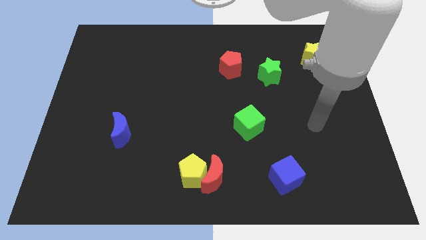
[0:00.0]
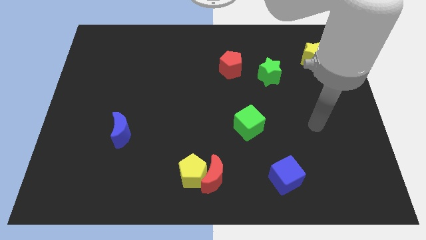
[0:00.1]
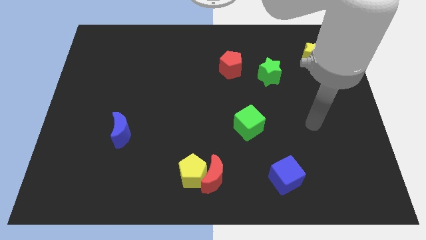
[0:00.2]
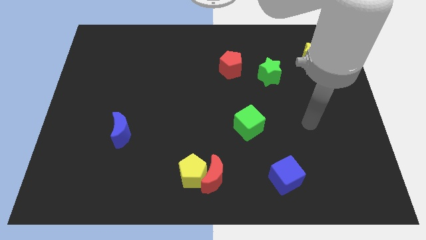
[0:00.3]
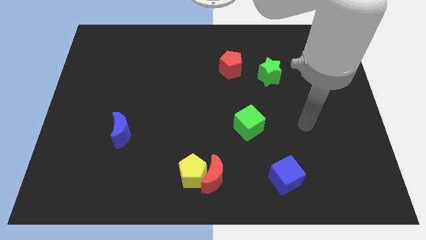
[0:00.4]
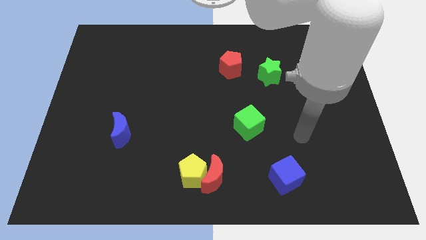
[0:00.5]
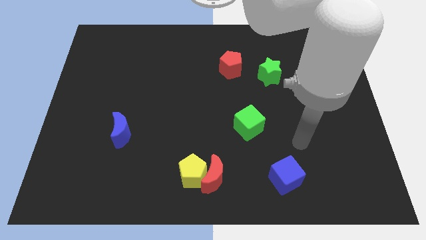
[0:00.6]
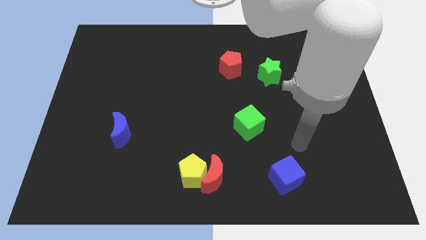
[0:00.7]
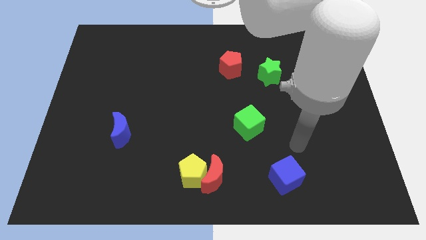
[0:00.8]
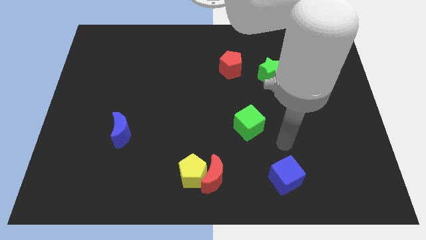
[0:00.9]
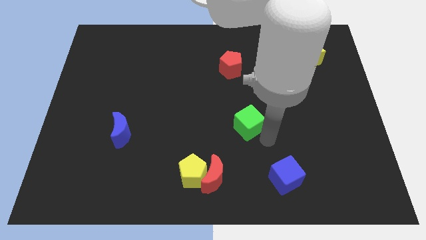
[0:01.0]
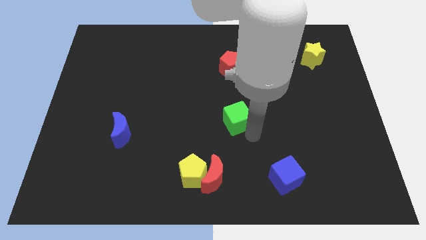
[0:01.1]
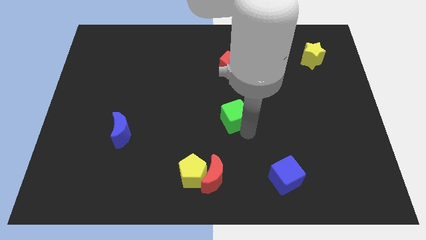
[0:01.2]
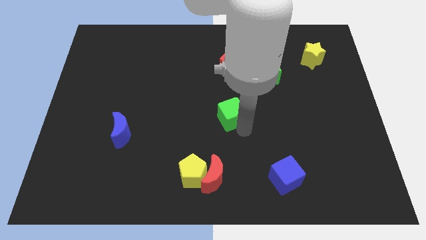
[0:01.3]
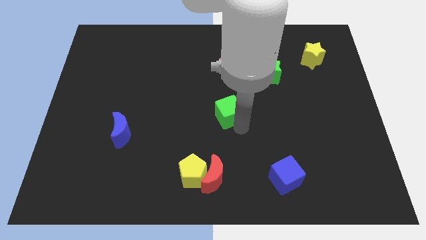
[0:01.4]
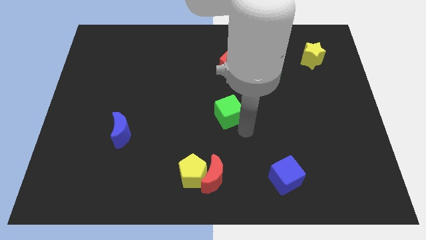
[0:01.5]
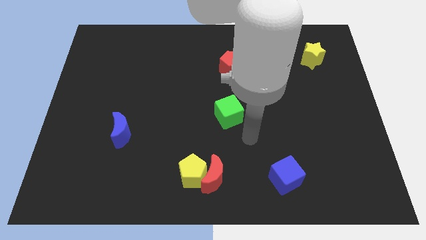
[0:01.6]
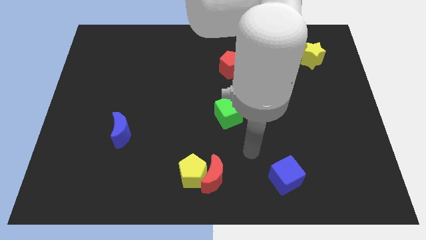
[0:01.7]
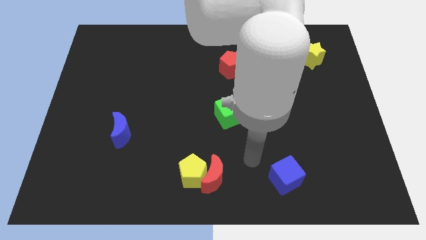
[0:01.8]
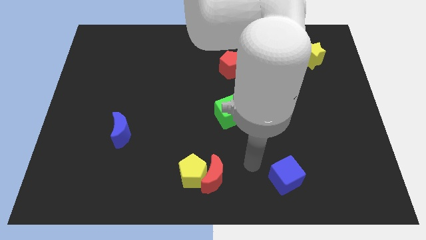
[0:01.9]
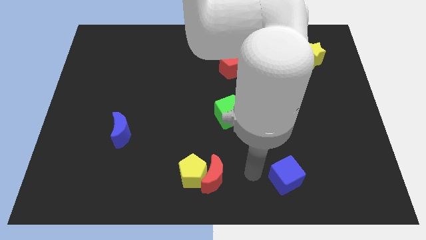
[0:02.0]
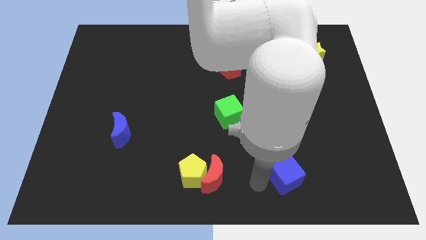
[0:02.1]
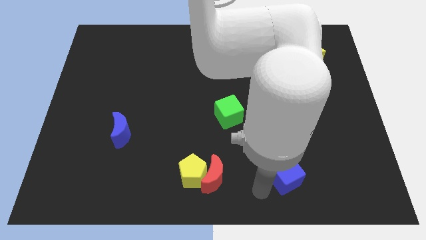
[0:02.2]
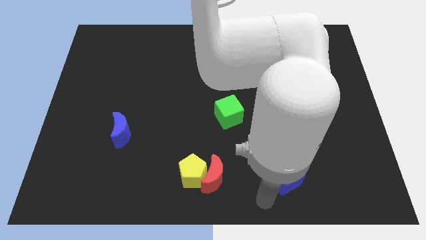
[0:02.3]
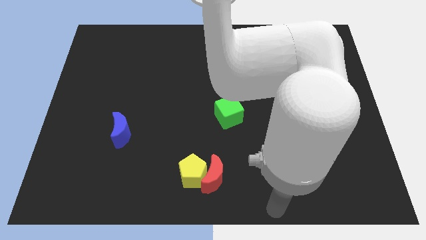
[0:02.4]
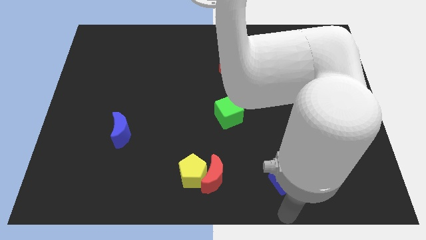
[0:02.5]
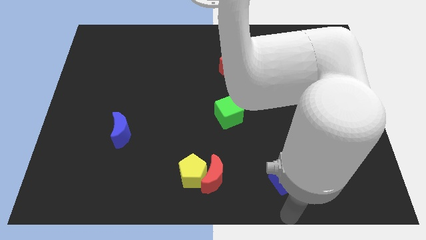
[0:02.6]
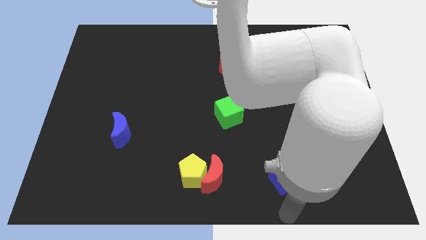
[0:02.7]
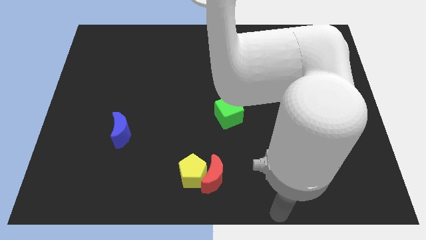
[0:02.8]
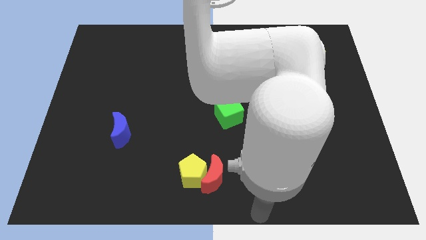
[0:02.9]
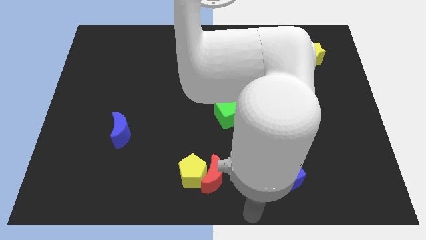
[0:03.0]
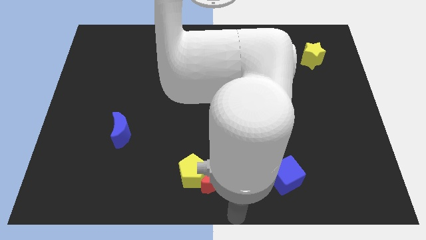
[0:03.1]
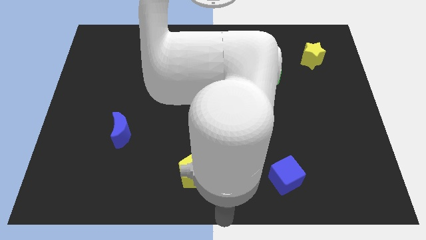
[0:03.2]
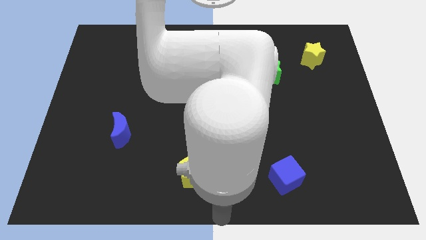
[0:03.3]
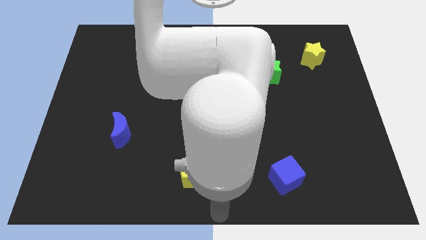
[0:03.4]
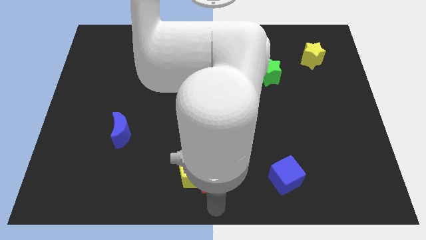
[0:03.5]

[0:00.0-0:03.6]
move the arm to the middle bottom

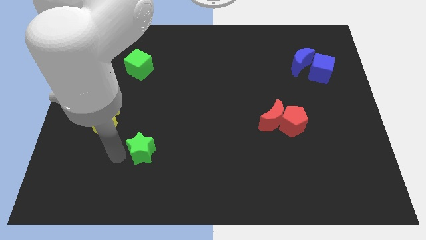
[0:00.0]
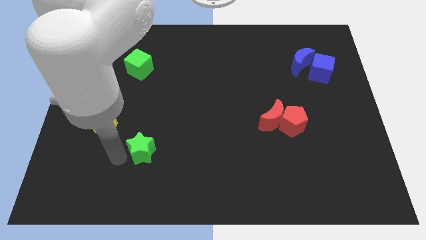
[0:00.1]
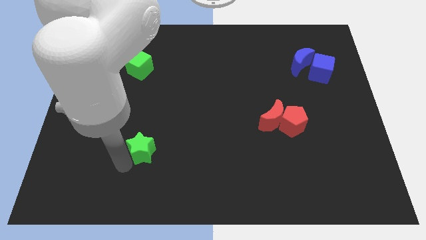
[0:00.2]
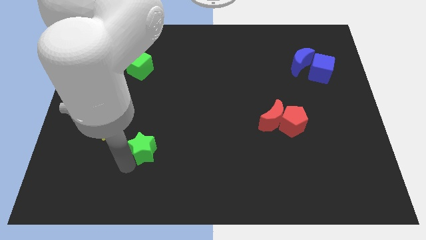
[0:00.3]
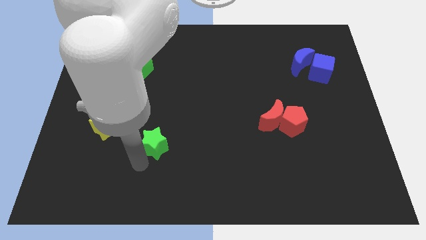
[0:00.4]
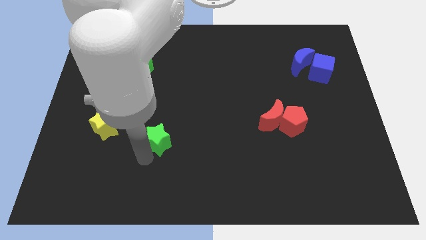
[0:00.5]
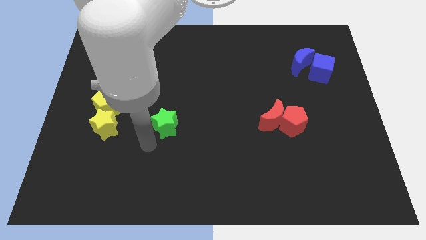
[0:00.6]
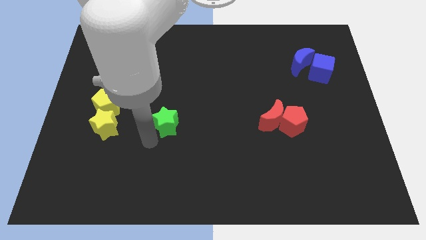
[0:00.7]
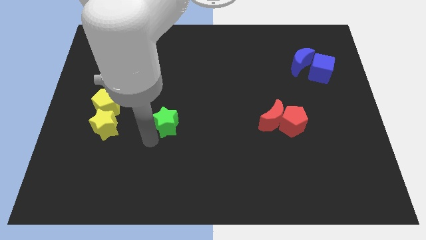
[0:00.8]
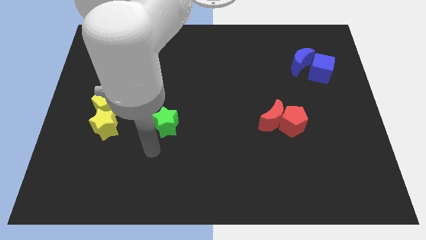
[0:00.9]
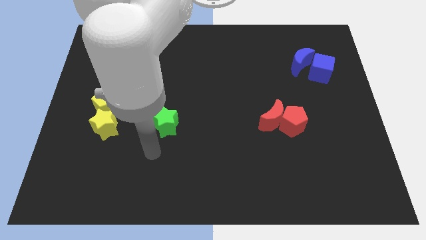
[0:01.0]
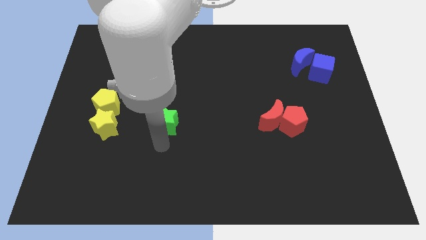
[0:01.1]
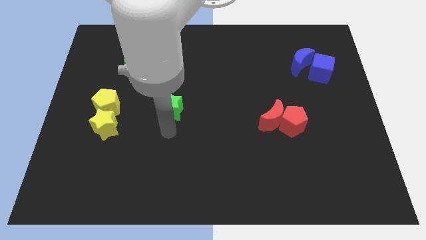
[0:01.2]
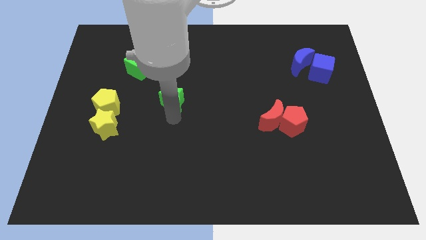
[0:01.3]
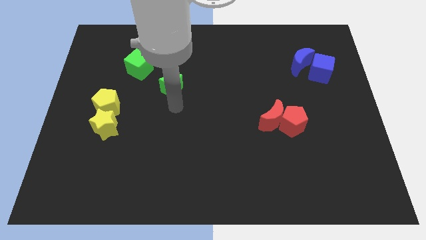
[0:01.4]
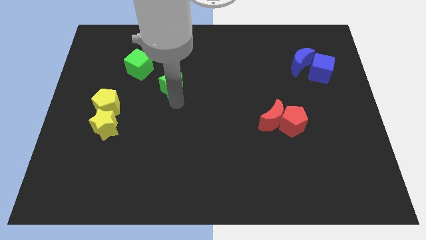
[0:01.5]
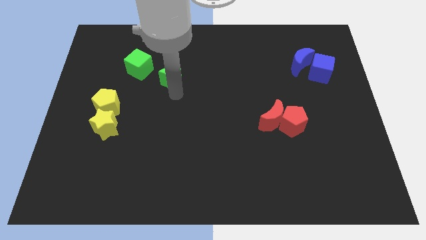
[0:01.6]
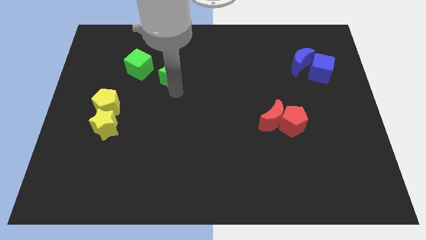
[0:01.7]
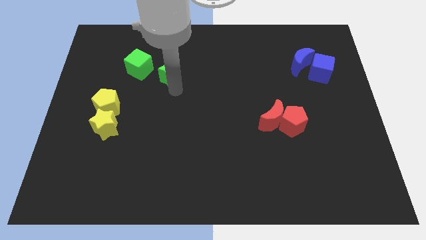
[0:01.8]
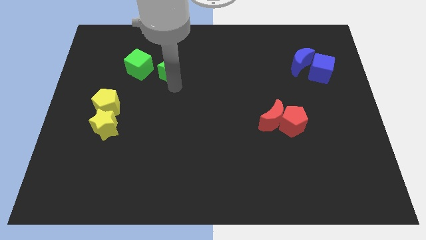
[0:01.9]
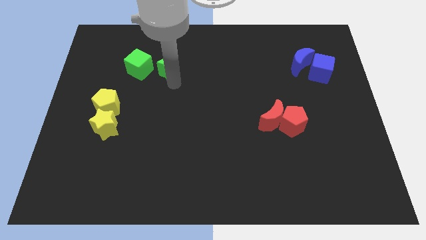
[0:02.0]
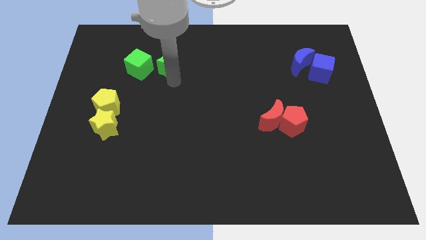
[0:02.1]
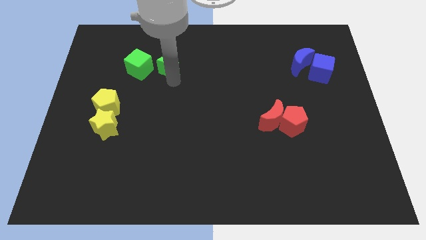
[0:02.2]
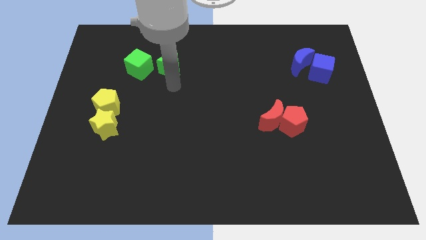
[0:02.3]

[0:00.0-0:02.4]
place green star to the right of the green cube

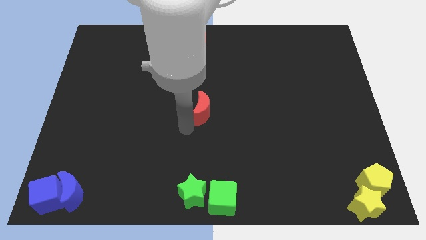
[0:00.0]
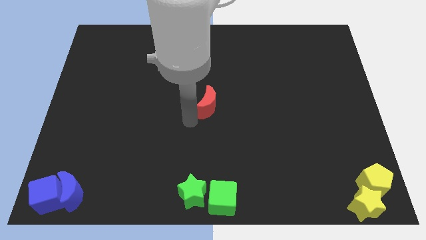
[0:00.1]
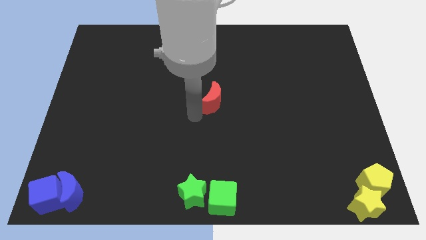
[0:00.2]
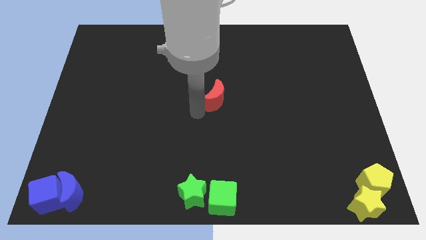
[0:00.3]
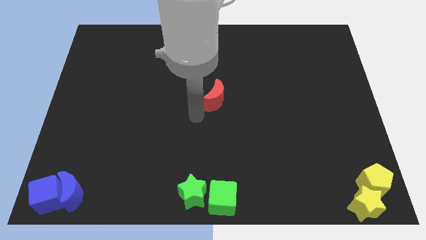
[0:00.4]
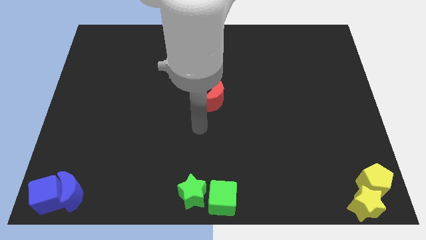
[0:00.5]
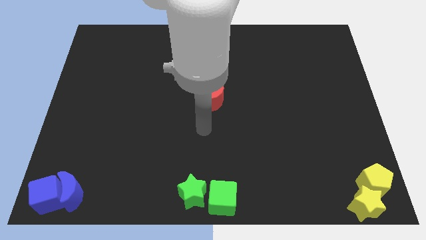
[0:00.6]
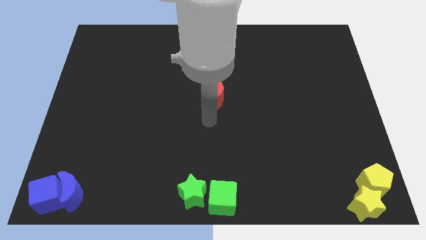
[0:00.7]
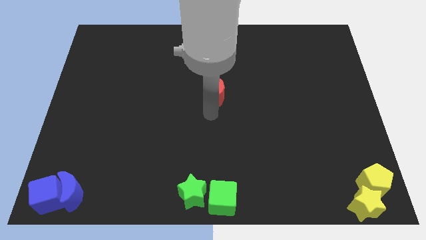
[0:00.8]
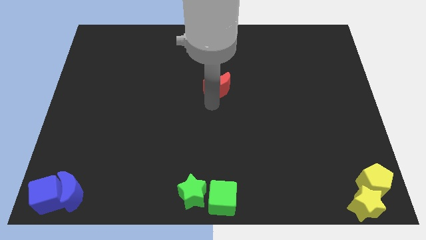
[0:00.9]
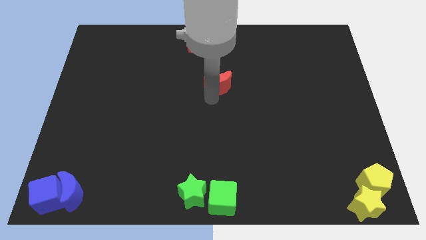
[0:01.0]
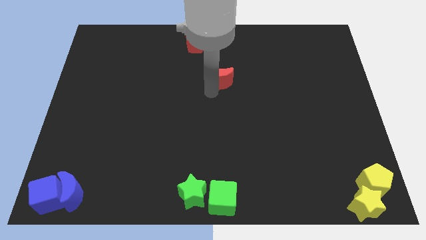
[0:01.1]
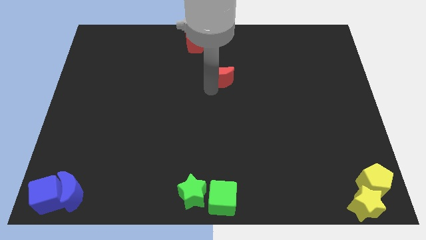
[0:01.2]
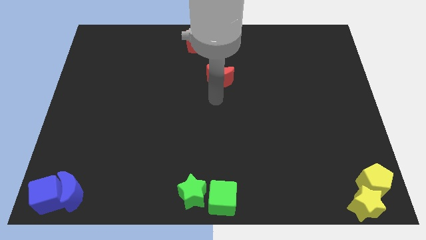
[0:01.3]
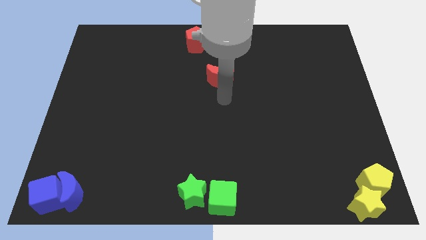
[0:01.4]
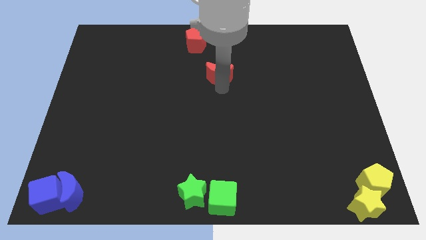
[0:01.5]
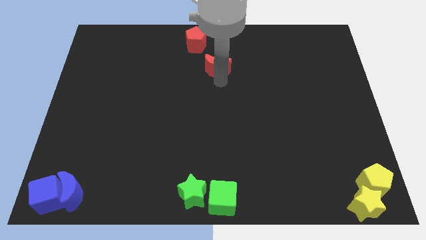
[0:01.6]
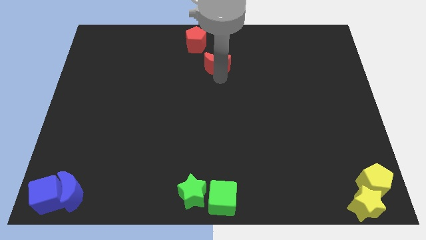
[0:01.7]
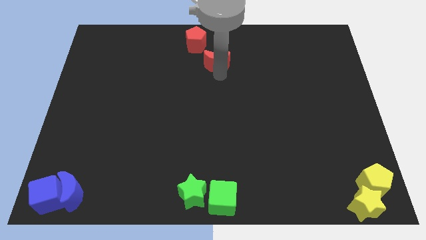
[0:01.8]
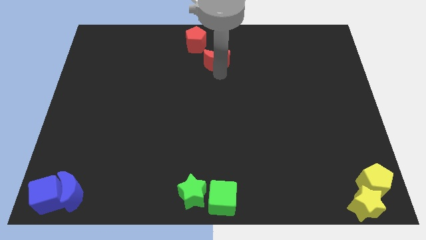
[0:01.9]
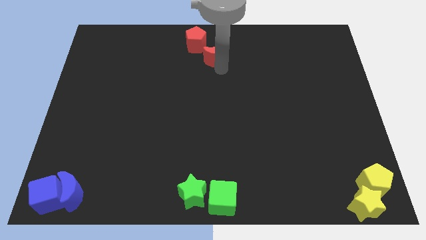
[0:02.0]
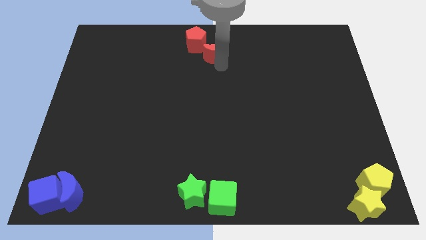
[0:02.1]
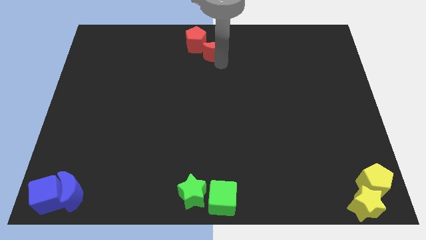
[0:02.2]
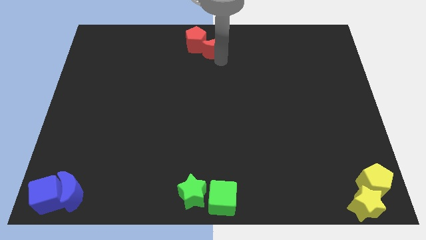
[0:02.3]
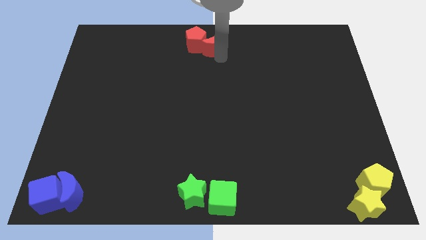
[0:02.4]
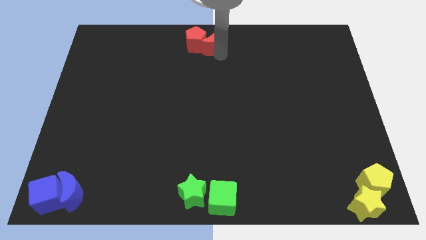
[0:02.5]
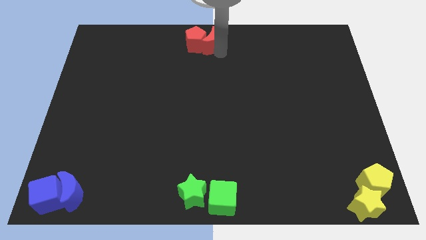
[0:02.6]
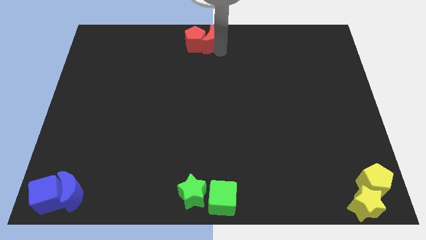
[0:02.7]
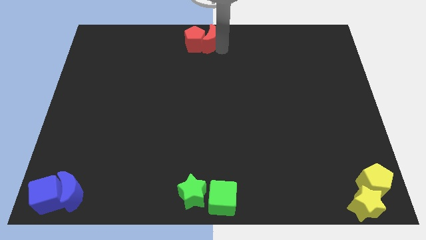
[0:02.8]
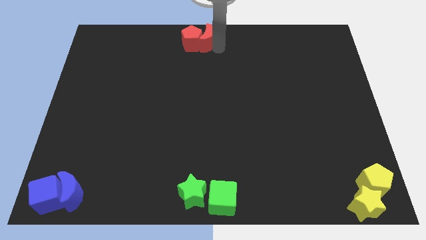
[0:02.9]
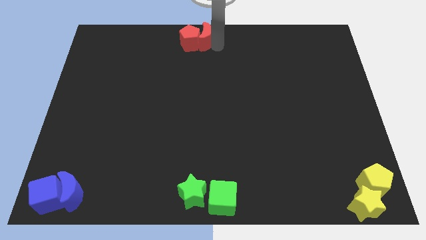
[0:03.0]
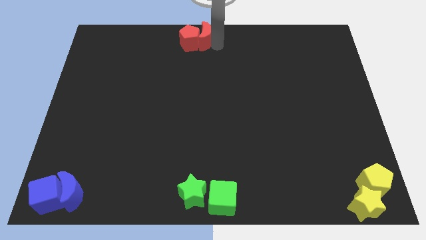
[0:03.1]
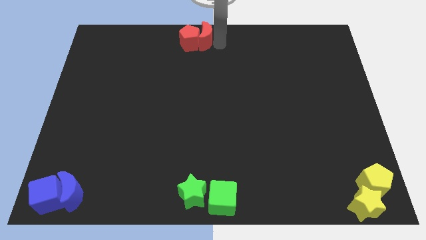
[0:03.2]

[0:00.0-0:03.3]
place red crescent beside red pentagon
